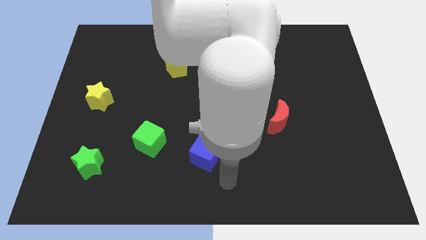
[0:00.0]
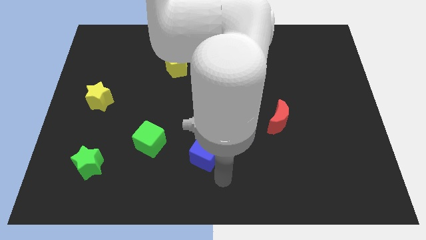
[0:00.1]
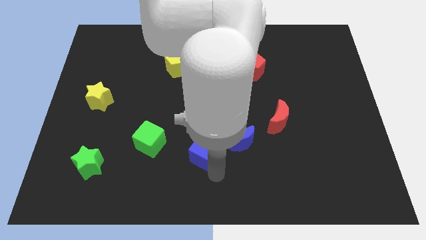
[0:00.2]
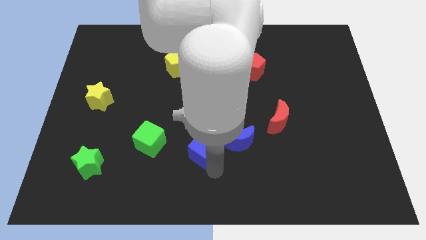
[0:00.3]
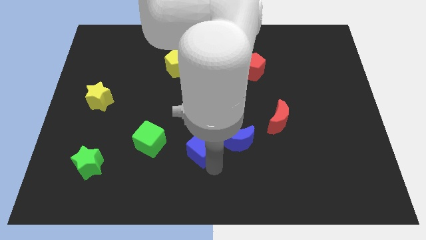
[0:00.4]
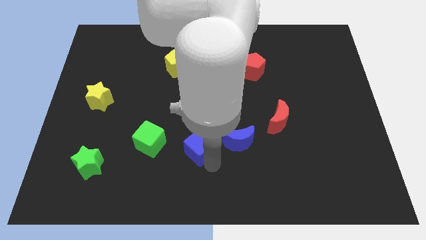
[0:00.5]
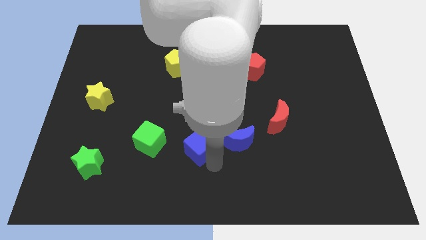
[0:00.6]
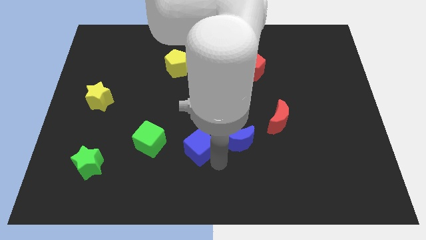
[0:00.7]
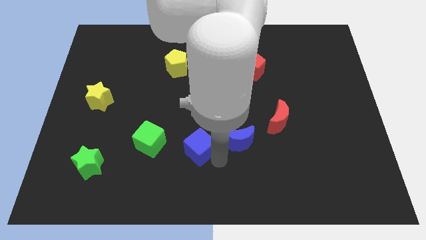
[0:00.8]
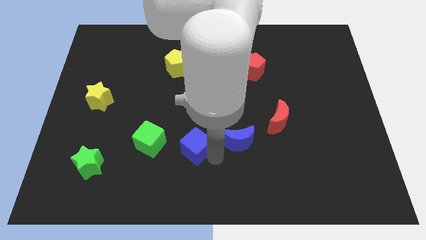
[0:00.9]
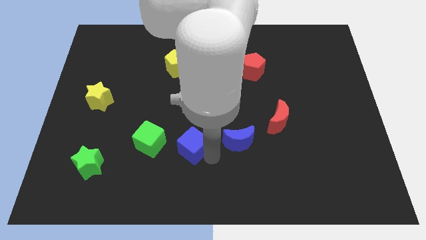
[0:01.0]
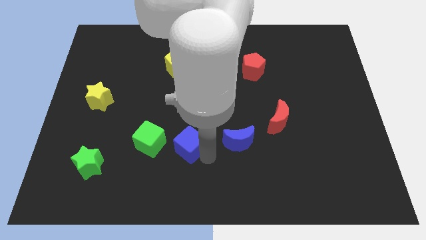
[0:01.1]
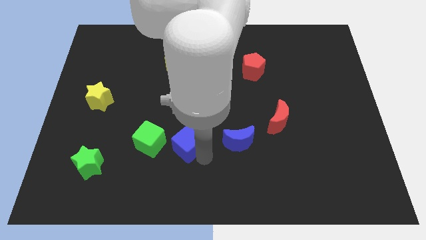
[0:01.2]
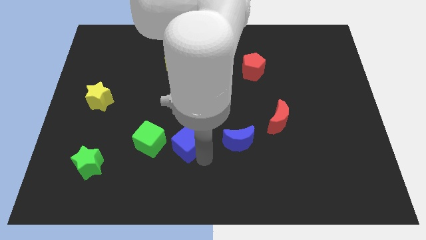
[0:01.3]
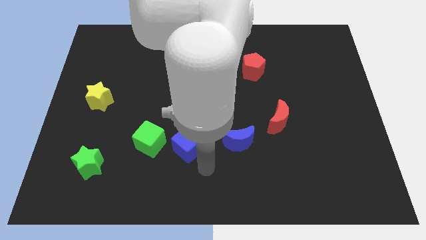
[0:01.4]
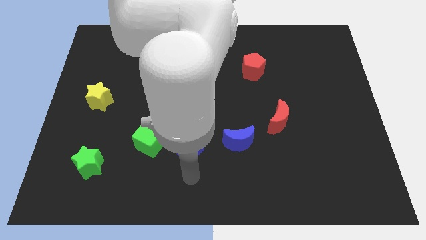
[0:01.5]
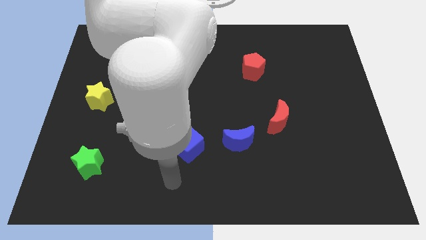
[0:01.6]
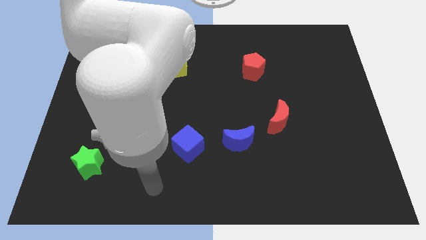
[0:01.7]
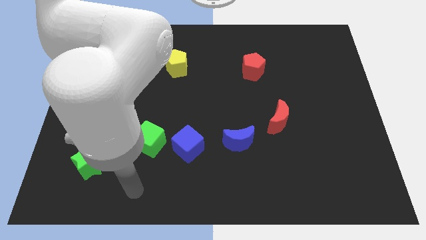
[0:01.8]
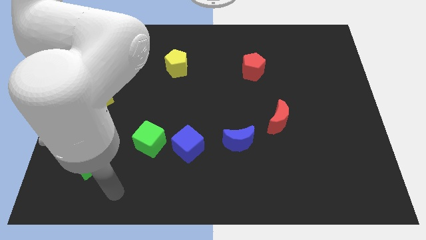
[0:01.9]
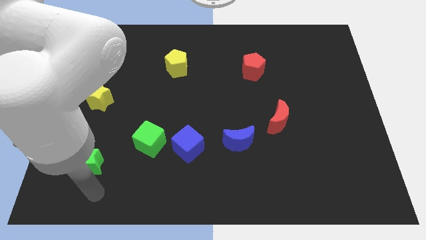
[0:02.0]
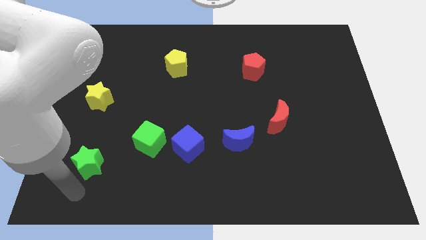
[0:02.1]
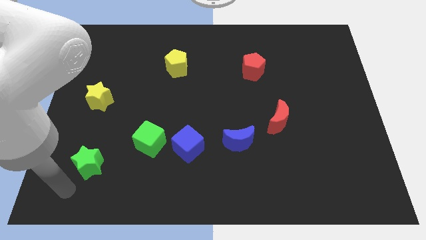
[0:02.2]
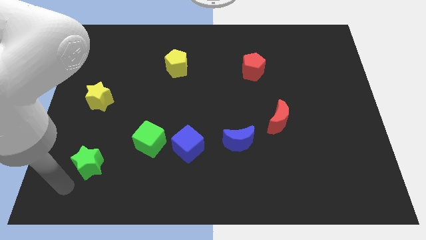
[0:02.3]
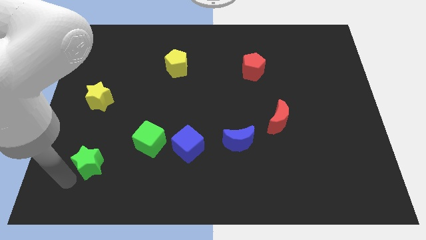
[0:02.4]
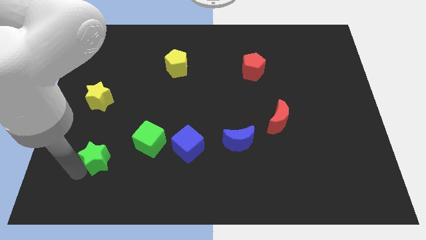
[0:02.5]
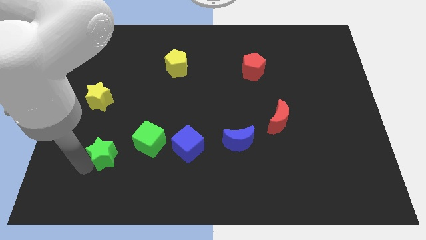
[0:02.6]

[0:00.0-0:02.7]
drag the blue cube right to the green cube

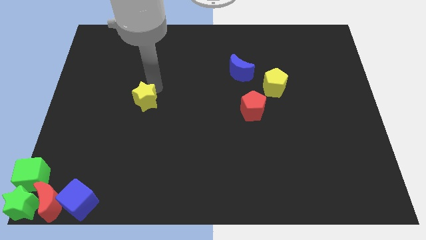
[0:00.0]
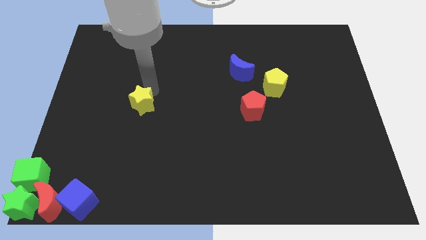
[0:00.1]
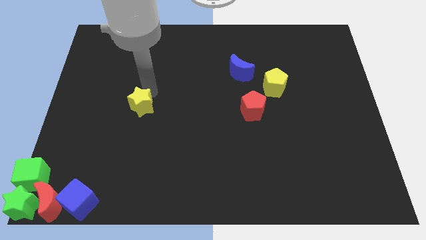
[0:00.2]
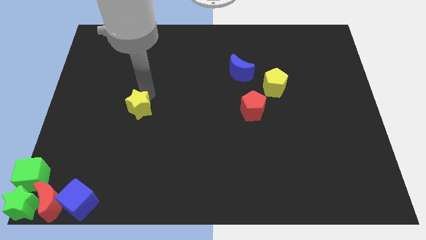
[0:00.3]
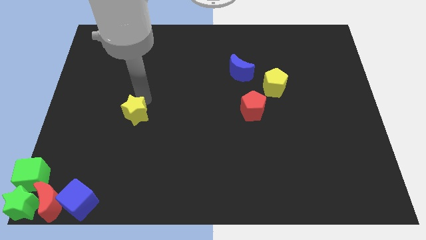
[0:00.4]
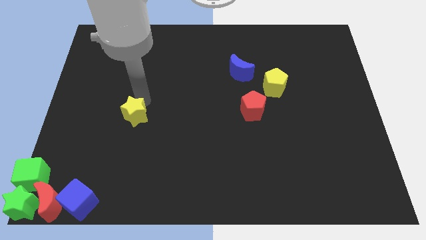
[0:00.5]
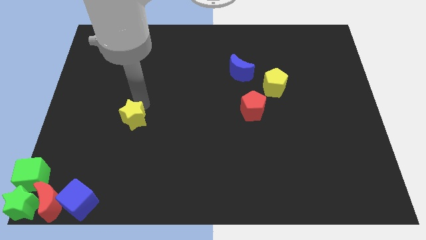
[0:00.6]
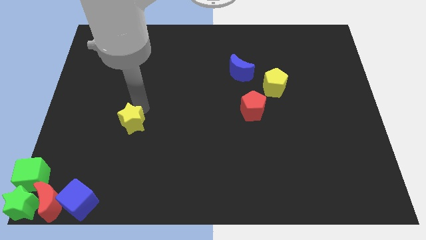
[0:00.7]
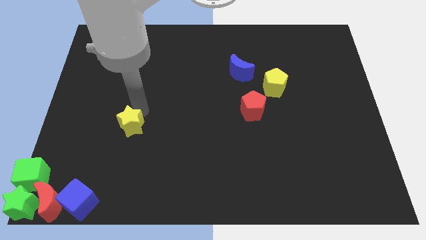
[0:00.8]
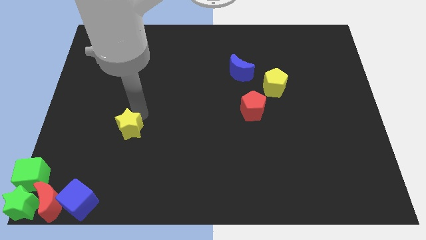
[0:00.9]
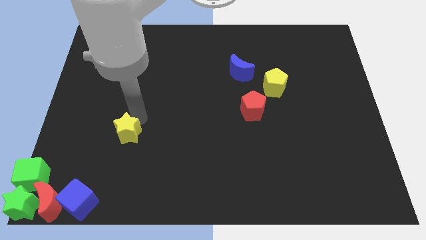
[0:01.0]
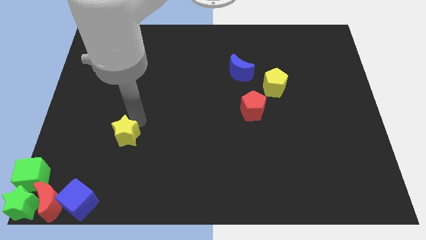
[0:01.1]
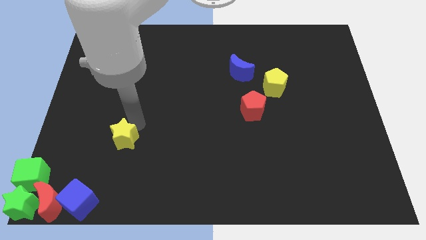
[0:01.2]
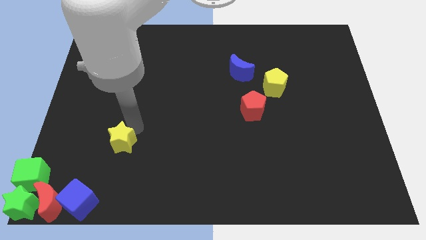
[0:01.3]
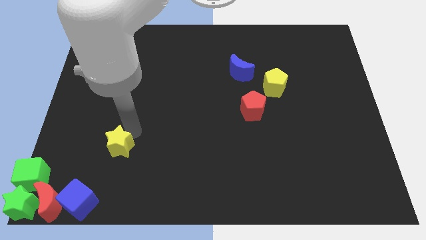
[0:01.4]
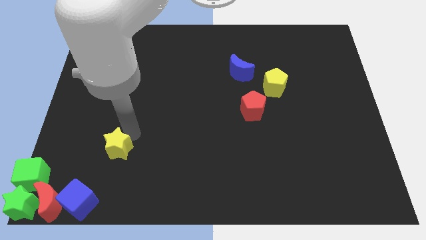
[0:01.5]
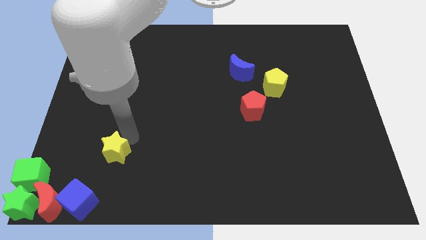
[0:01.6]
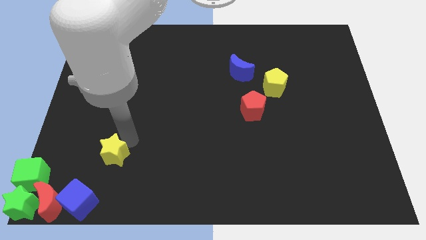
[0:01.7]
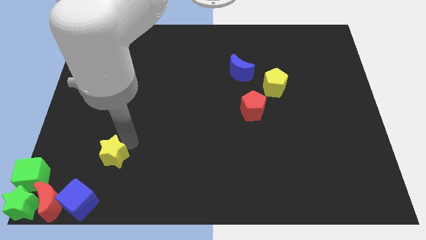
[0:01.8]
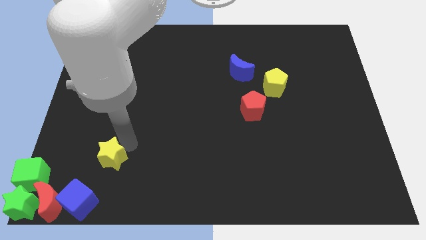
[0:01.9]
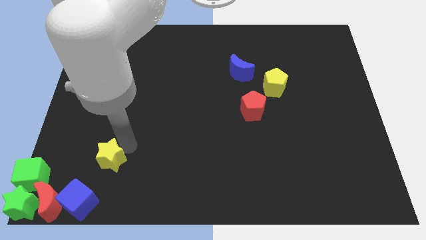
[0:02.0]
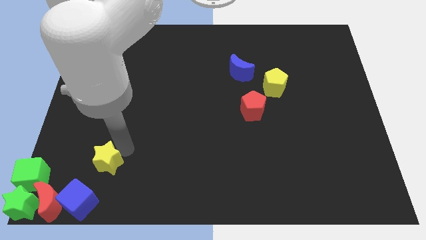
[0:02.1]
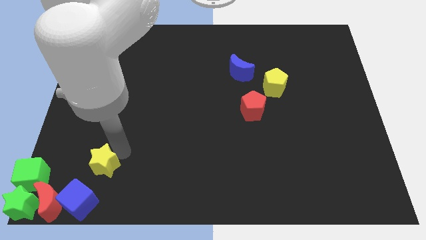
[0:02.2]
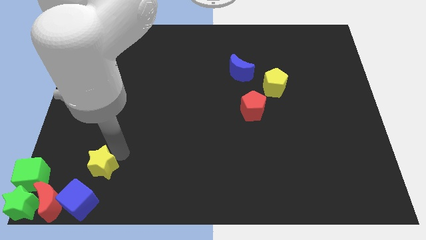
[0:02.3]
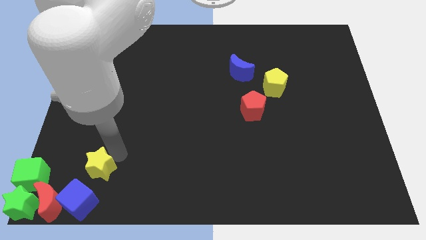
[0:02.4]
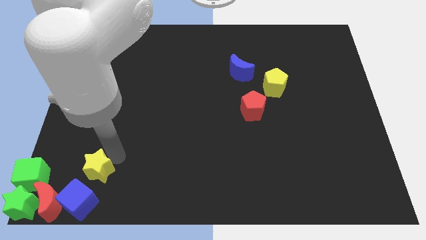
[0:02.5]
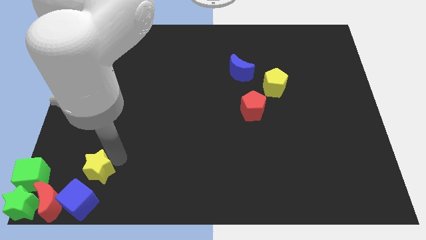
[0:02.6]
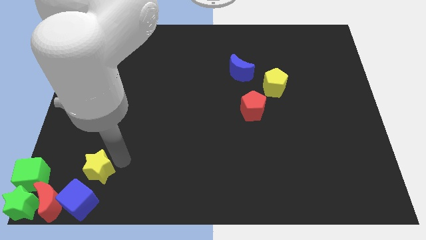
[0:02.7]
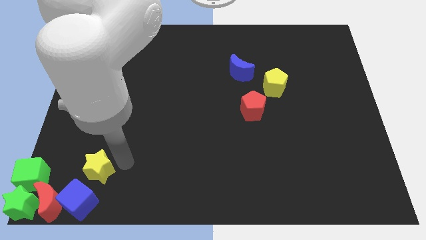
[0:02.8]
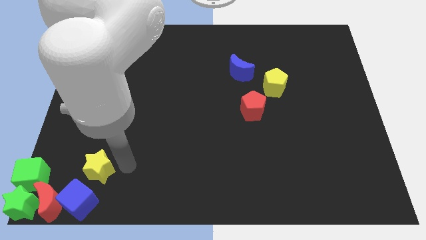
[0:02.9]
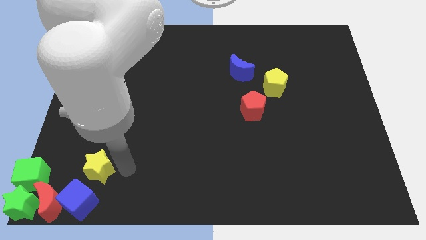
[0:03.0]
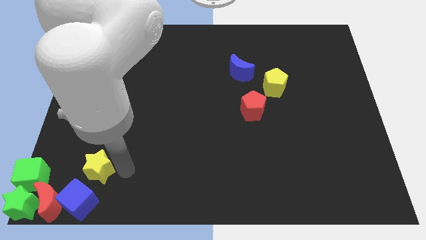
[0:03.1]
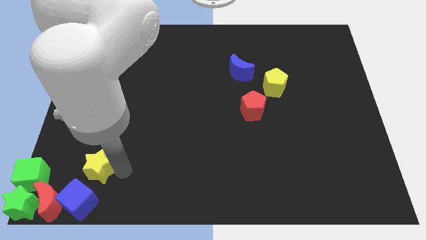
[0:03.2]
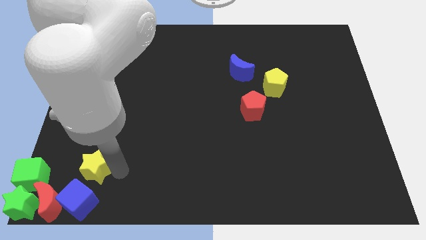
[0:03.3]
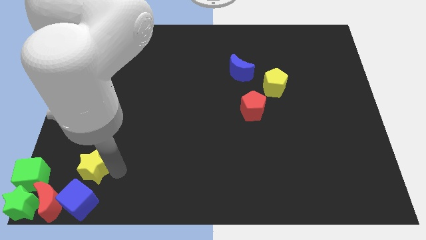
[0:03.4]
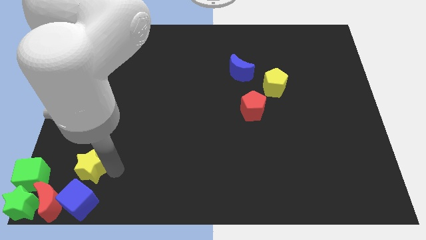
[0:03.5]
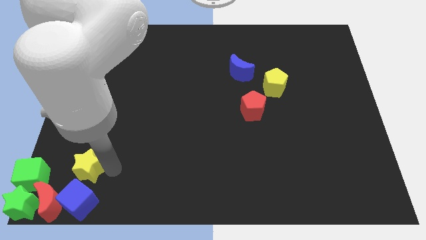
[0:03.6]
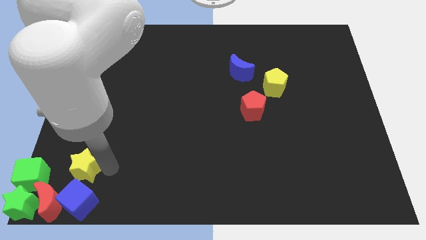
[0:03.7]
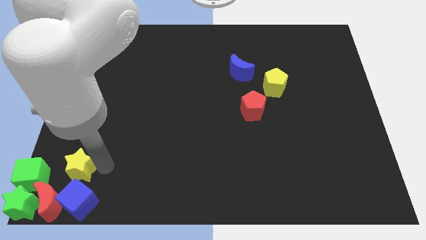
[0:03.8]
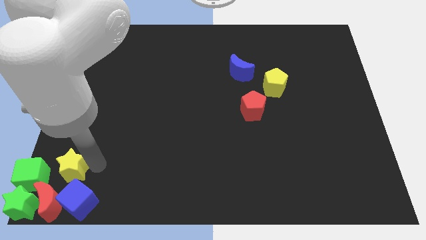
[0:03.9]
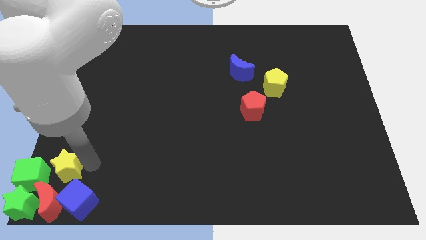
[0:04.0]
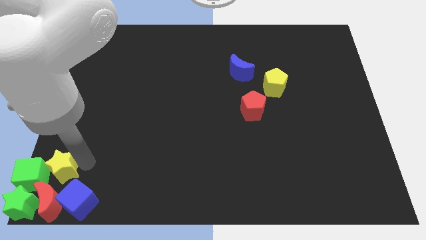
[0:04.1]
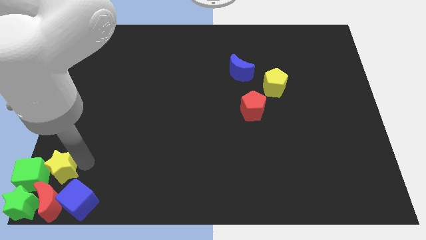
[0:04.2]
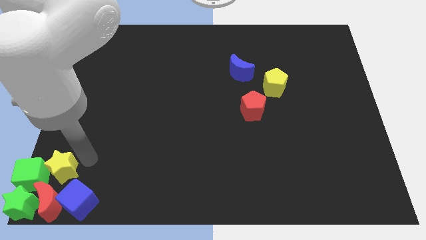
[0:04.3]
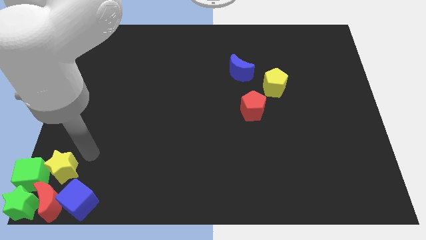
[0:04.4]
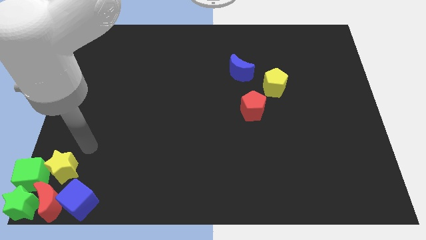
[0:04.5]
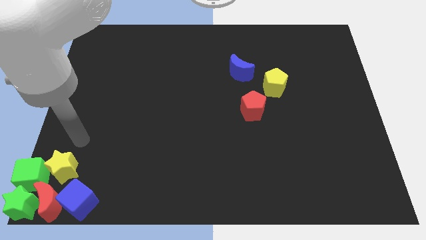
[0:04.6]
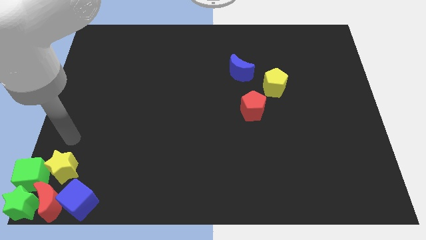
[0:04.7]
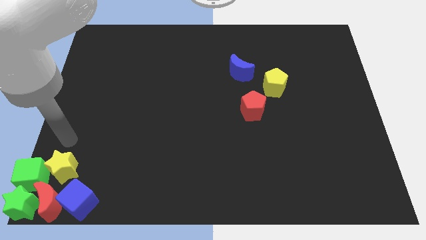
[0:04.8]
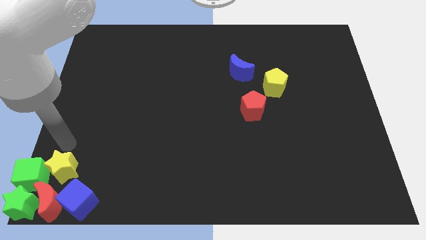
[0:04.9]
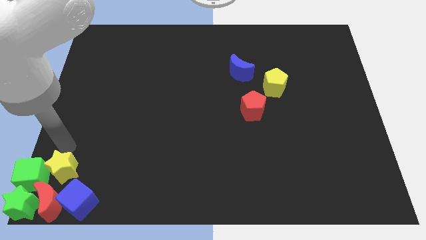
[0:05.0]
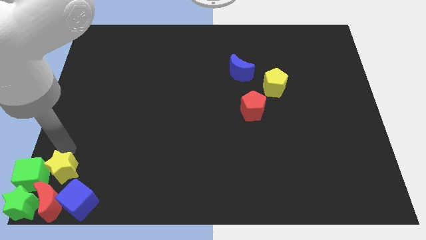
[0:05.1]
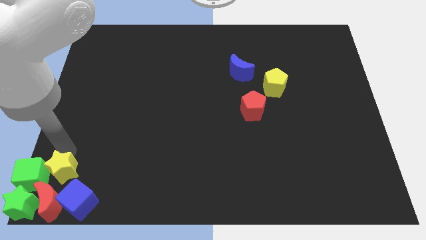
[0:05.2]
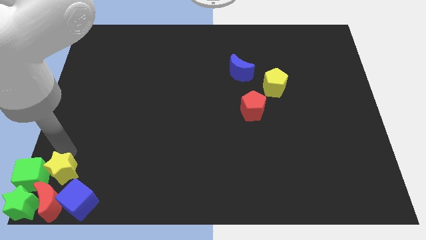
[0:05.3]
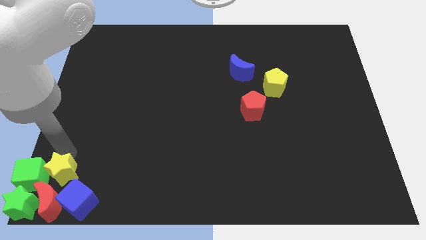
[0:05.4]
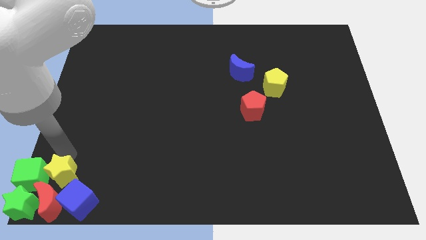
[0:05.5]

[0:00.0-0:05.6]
push the yellow stat to the top of the red crescent

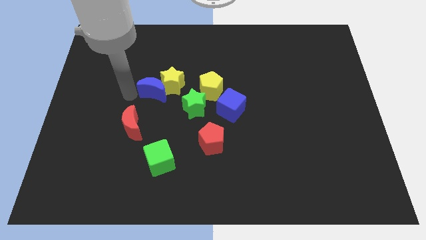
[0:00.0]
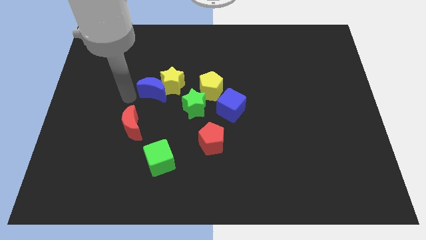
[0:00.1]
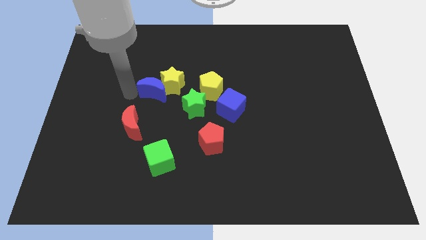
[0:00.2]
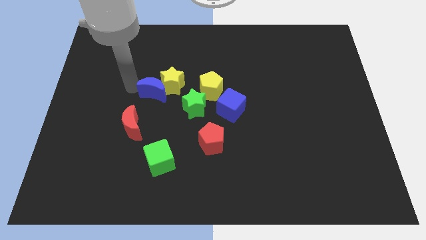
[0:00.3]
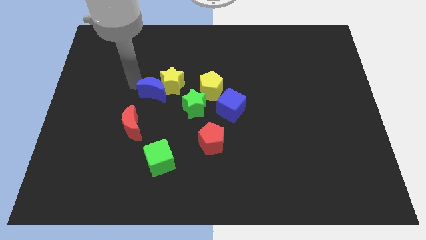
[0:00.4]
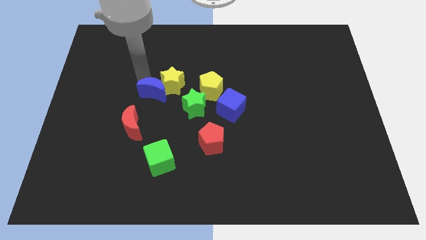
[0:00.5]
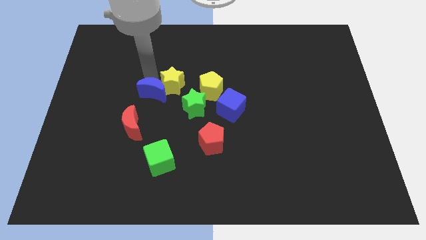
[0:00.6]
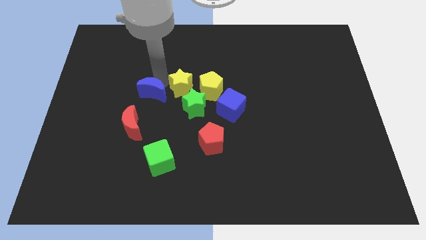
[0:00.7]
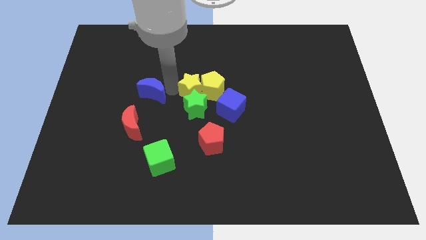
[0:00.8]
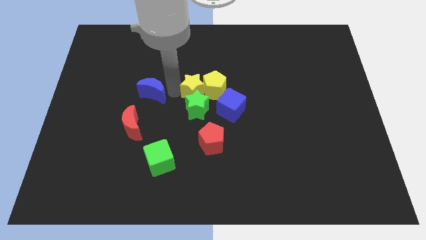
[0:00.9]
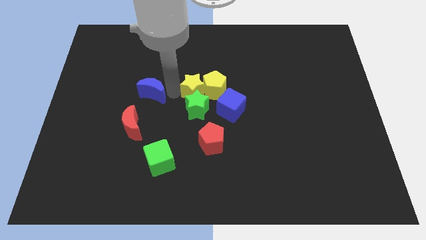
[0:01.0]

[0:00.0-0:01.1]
push the yellow star into the left side of the yellow pentagon
